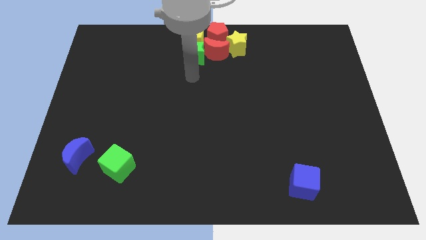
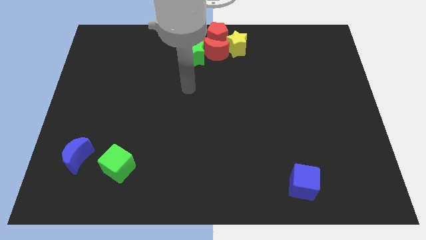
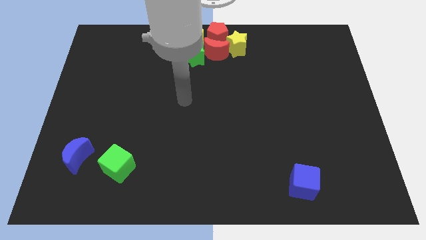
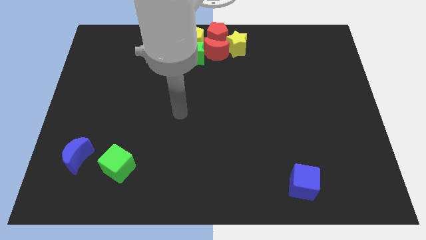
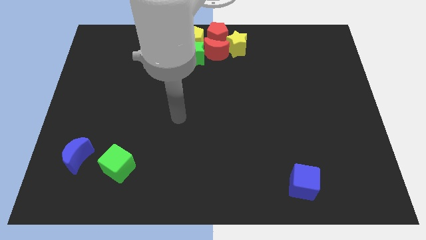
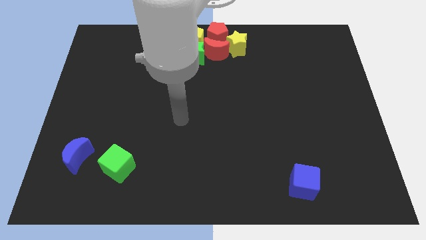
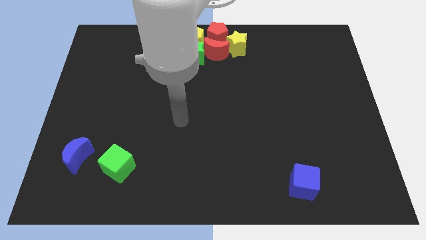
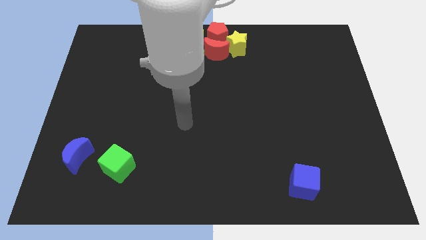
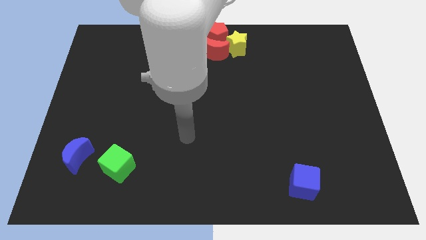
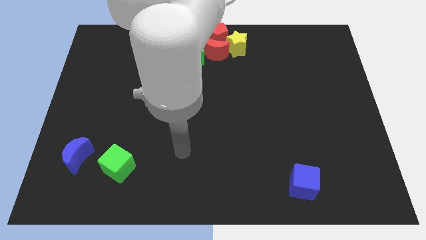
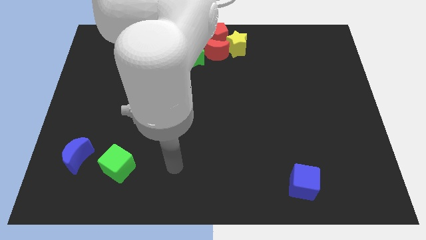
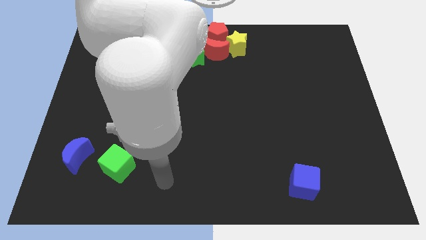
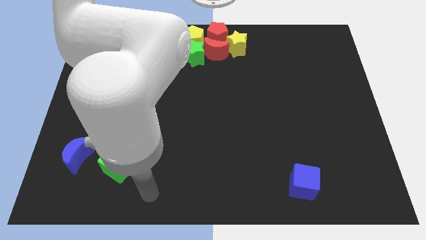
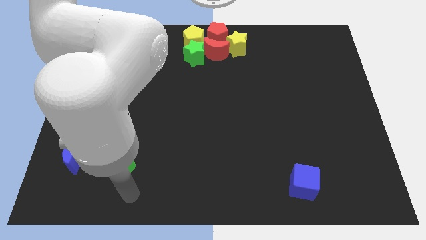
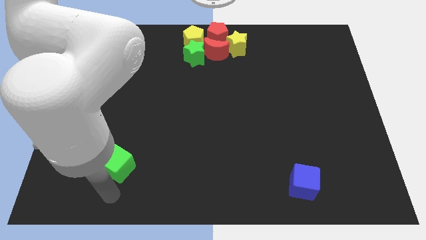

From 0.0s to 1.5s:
move your arm towards the green cube

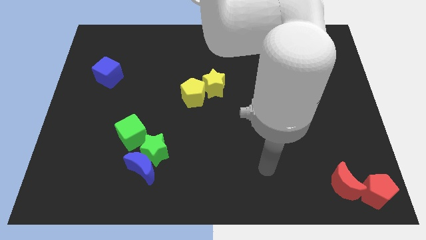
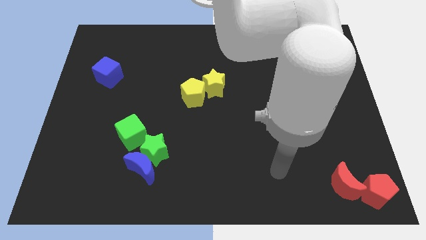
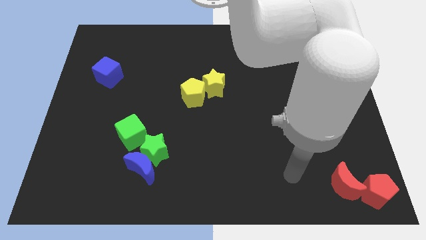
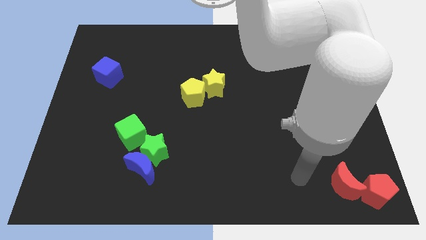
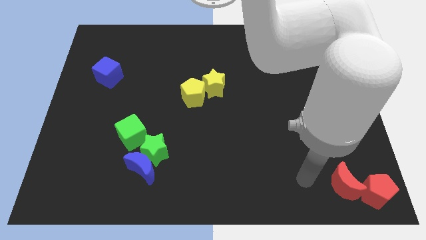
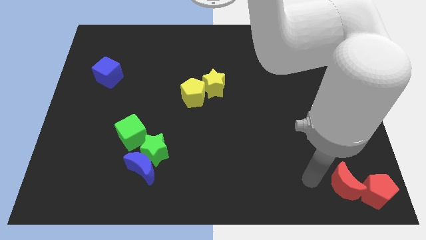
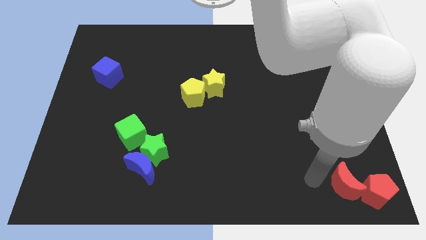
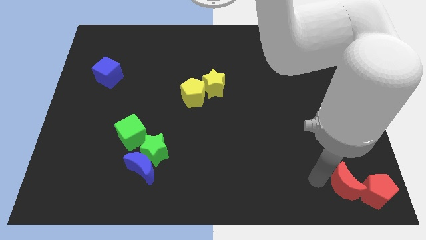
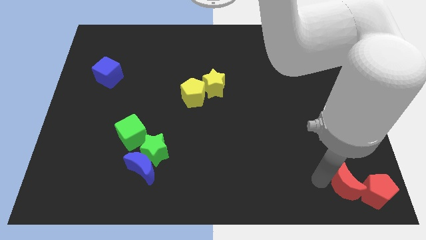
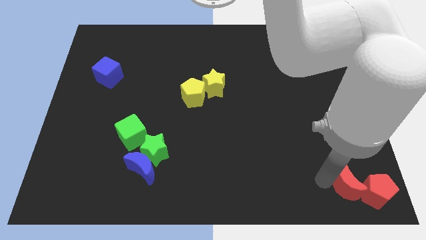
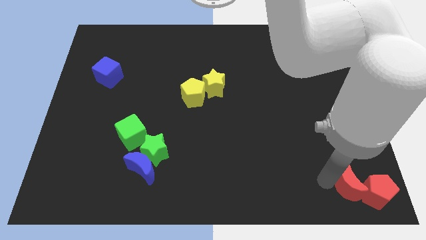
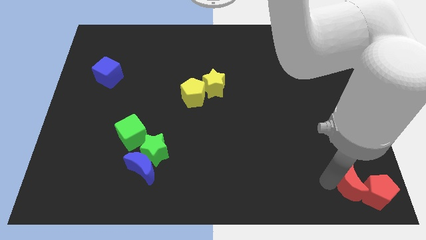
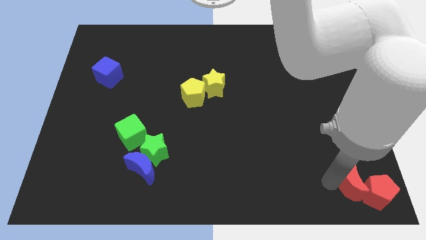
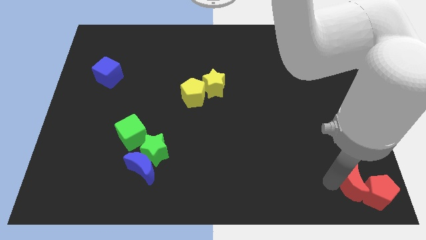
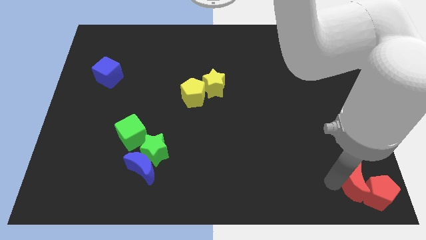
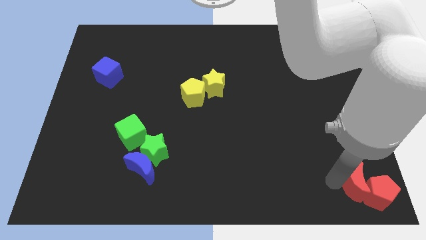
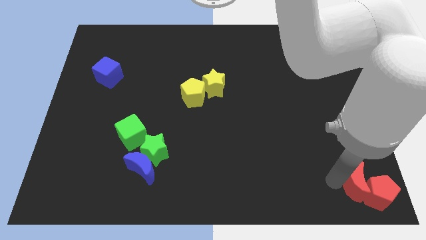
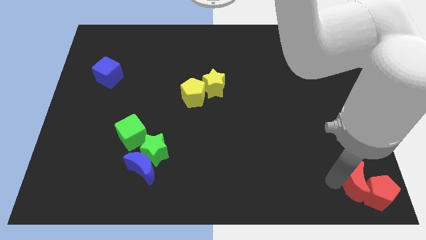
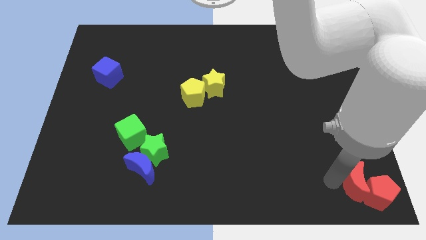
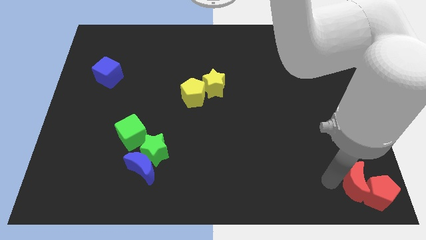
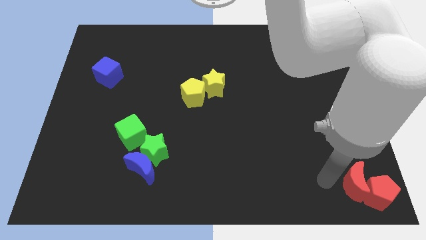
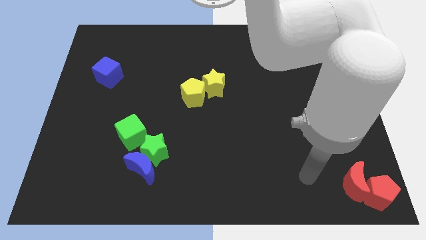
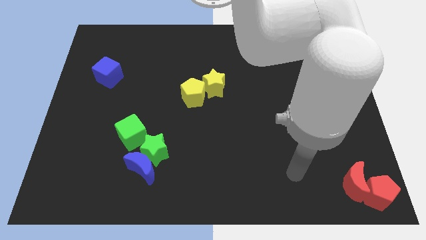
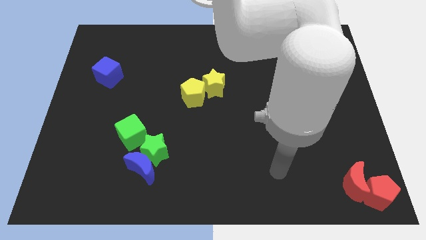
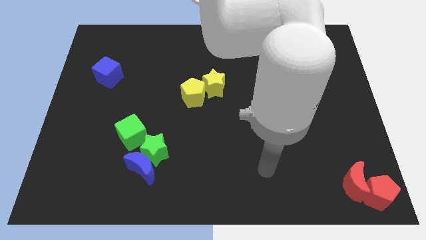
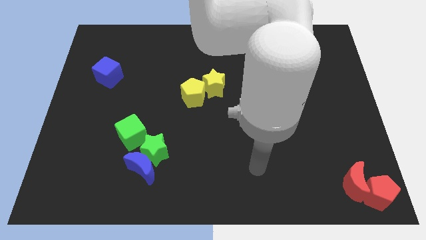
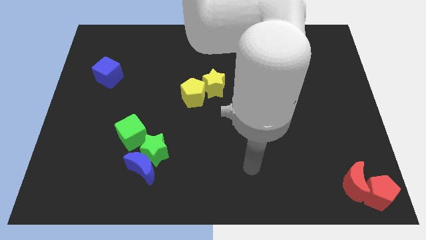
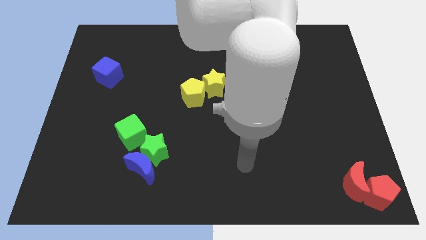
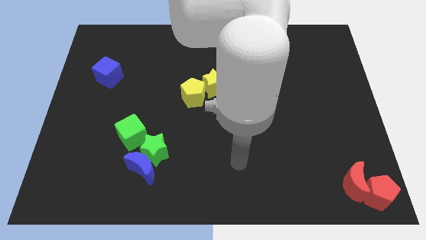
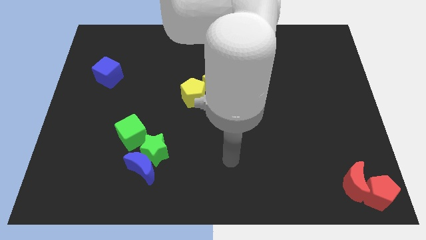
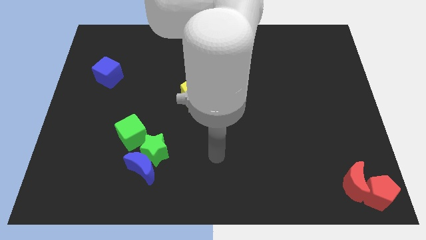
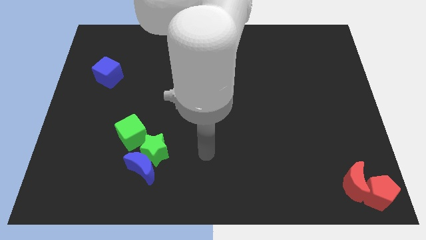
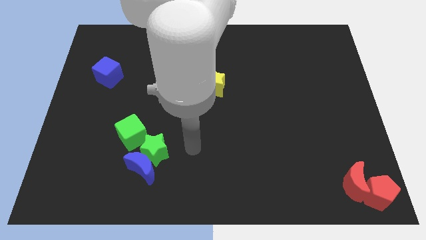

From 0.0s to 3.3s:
slide the red crescent to the top left side of the red pentagon

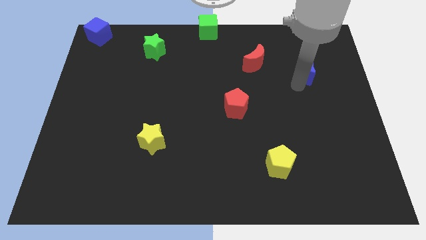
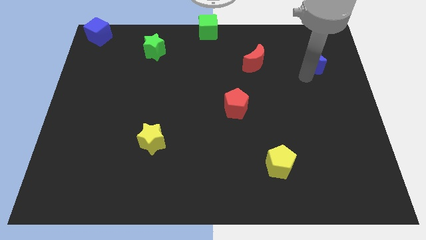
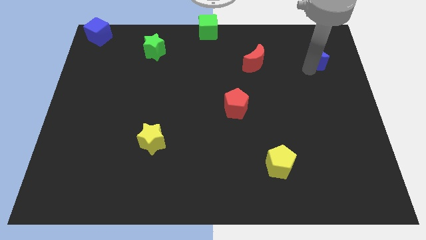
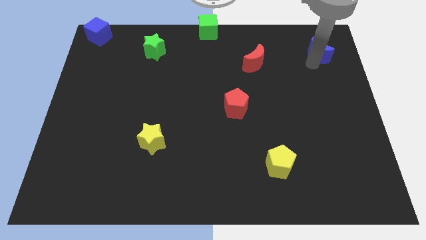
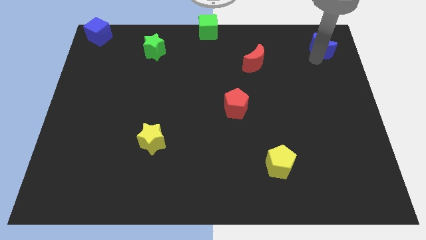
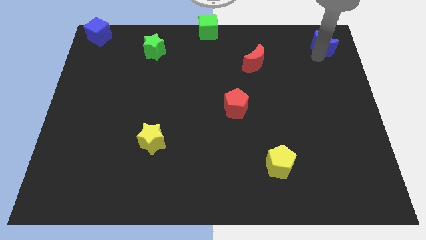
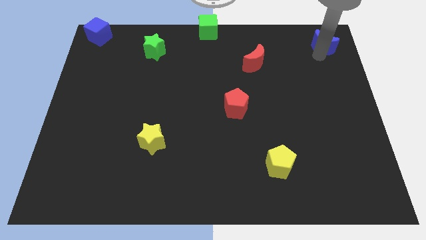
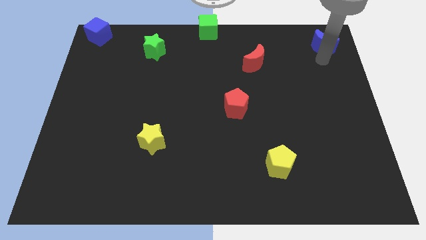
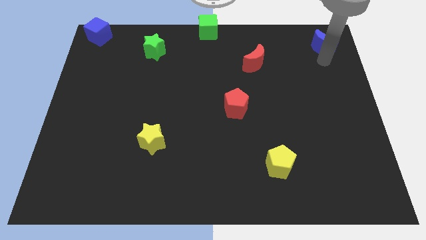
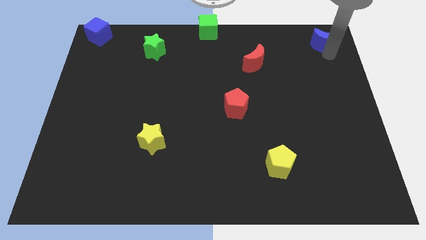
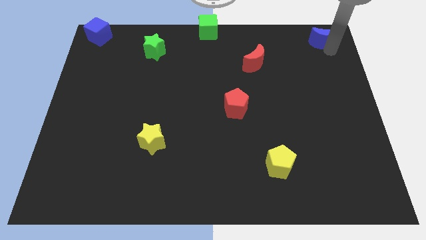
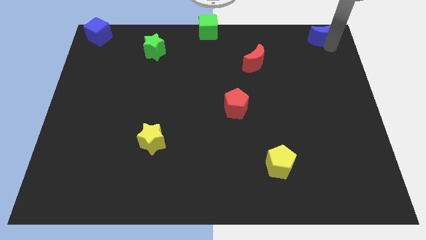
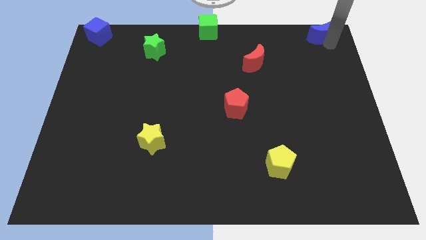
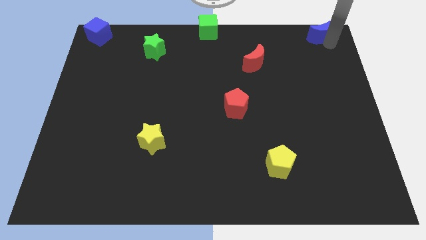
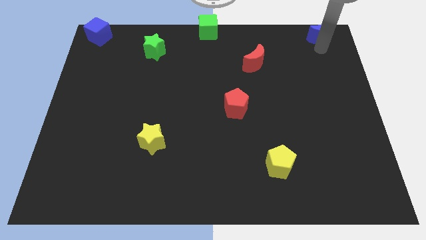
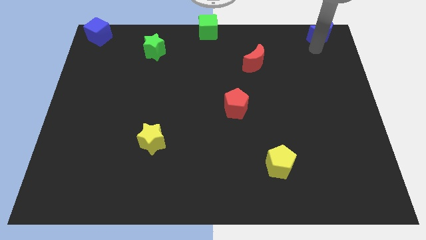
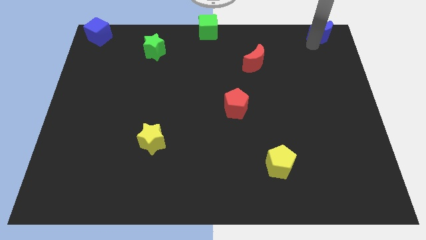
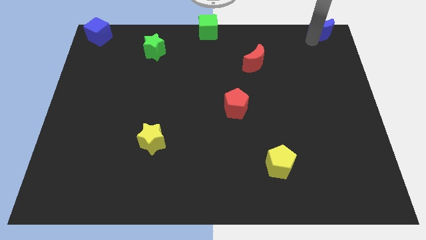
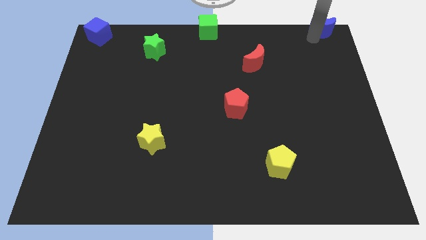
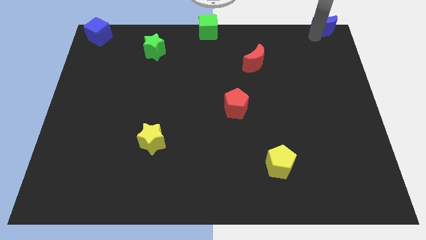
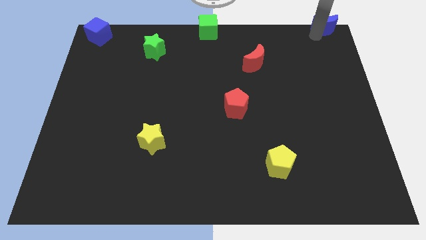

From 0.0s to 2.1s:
move the blue crescent parallel to the green cube

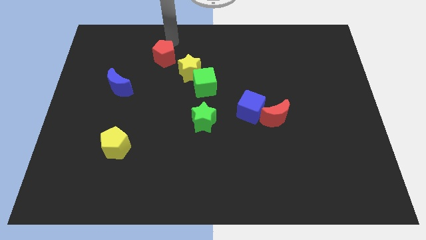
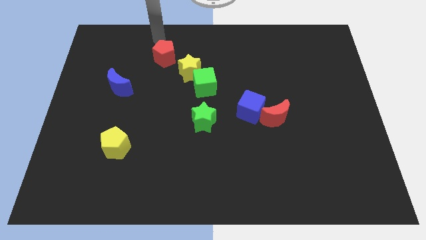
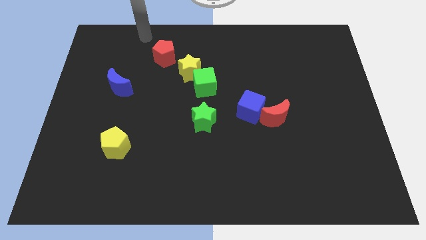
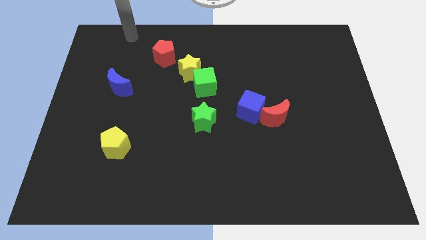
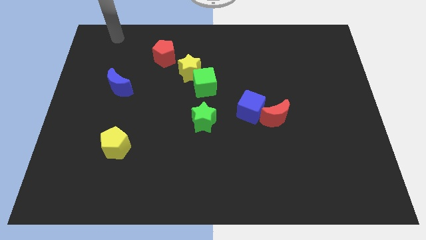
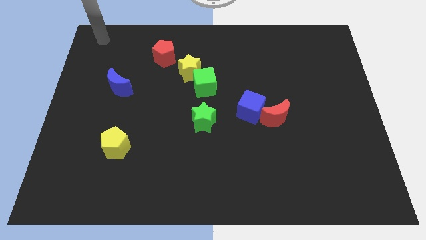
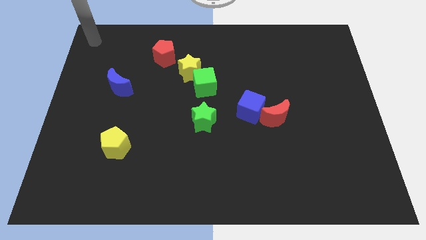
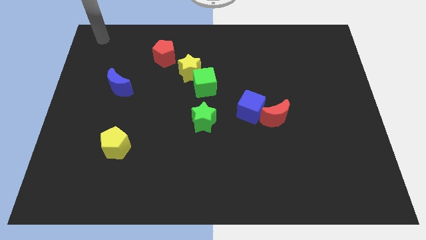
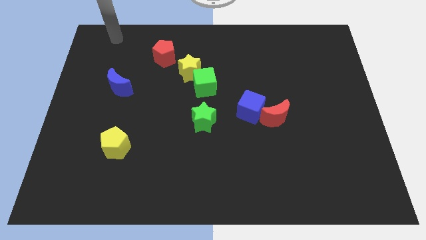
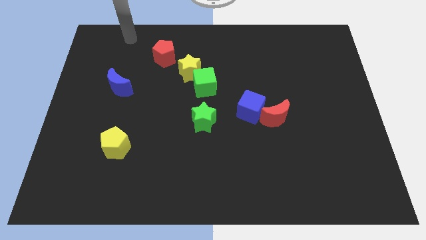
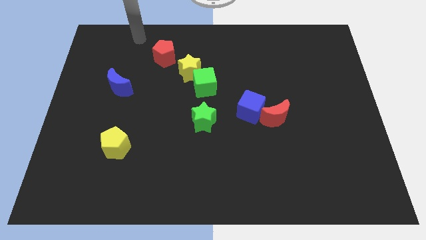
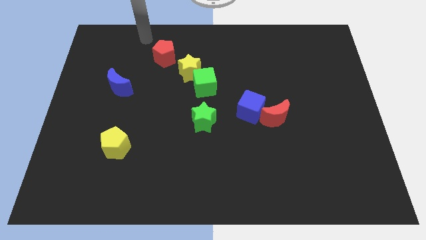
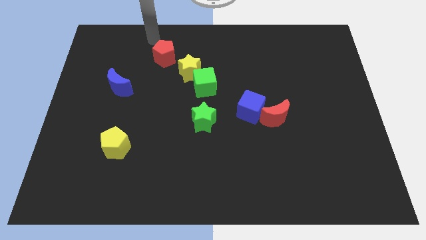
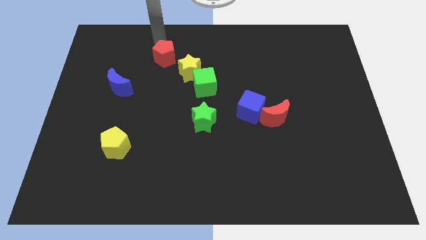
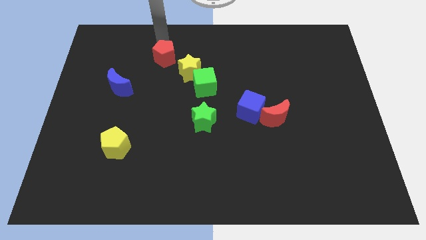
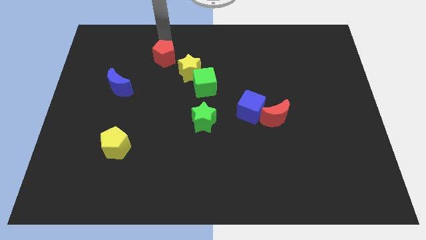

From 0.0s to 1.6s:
move your hand above the red pentagon

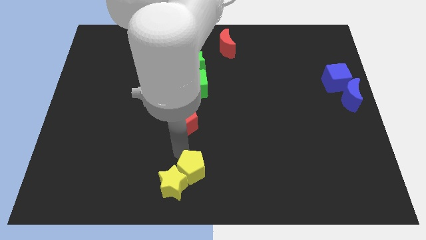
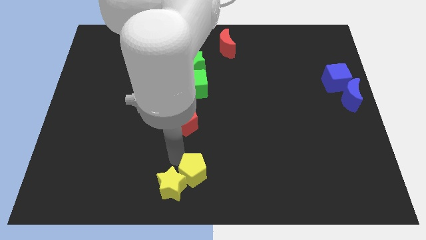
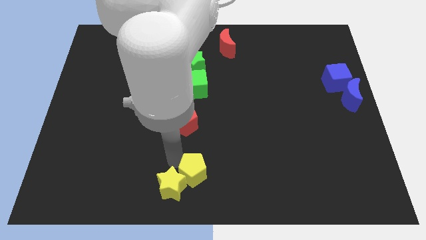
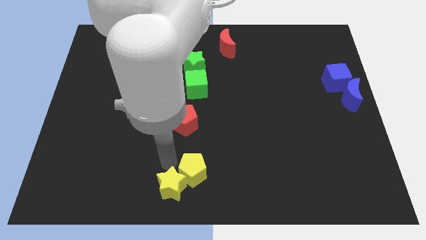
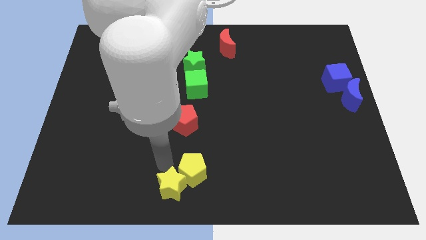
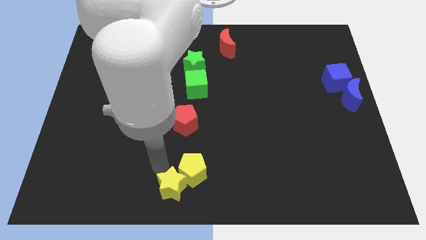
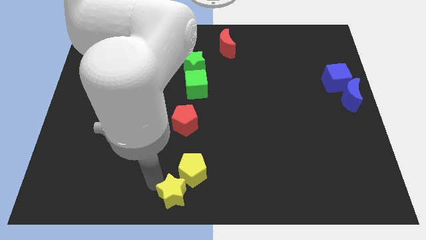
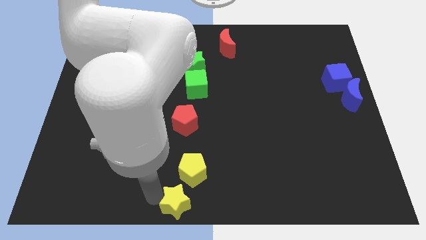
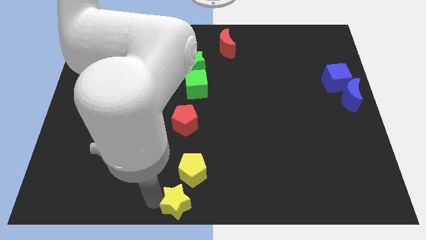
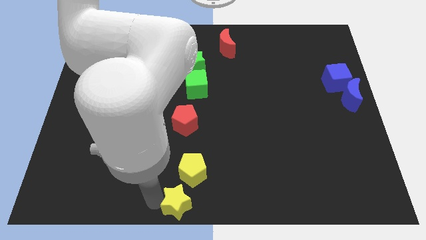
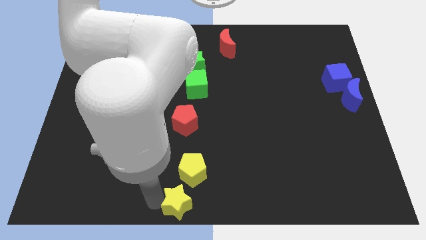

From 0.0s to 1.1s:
slide yellow star to the bottom center
